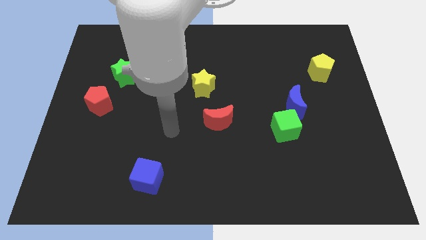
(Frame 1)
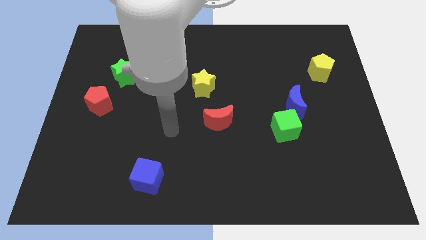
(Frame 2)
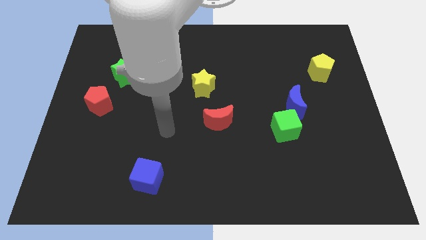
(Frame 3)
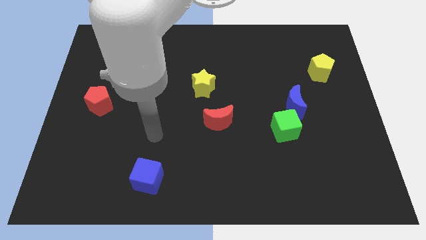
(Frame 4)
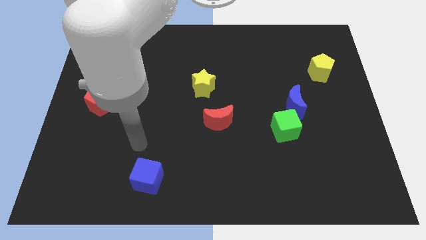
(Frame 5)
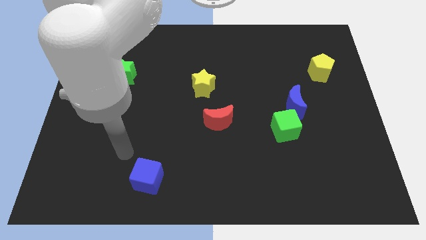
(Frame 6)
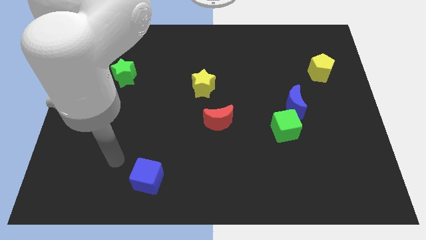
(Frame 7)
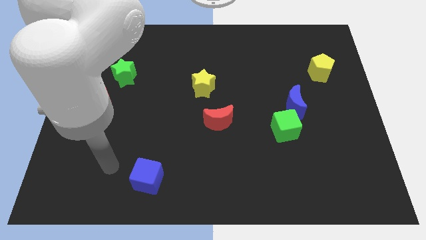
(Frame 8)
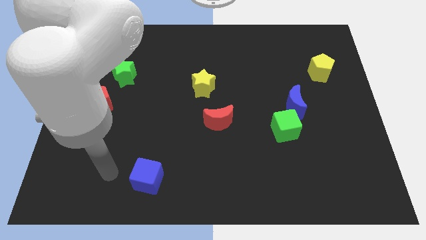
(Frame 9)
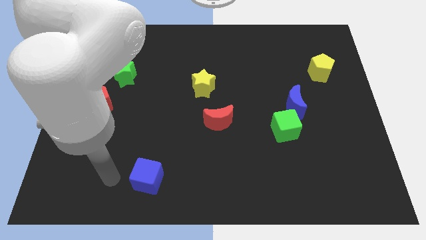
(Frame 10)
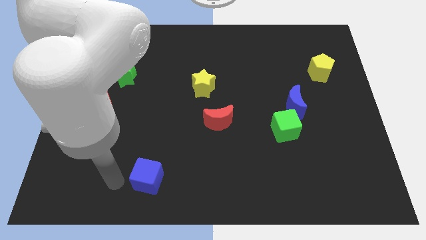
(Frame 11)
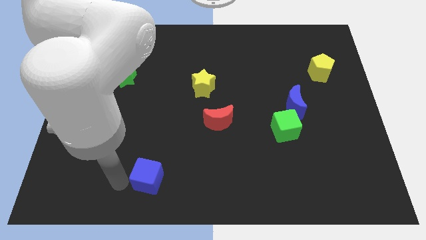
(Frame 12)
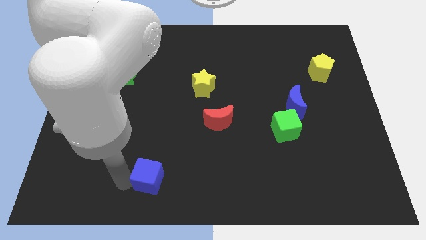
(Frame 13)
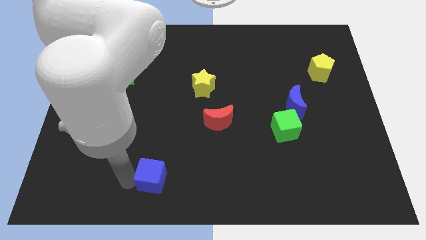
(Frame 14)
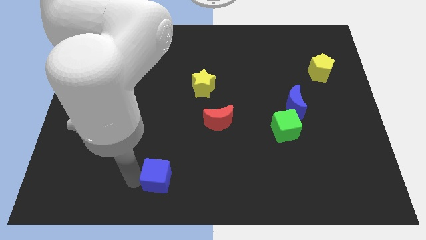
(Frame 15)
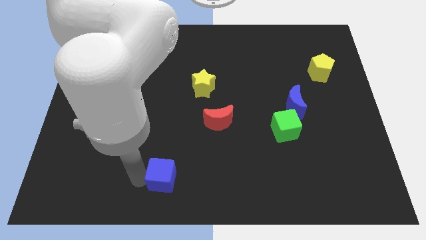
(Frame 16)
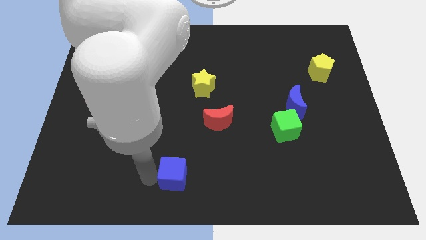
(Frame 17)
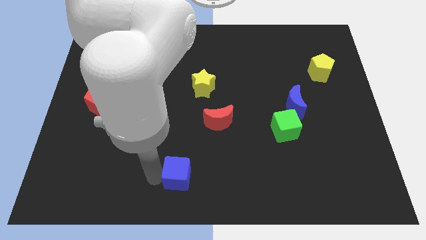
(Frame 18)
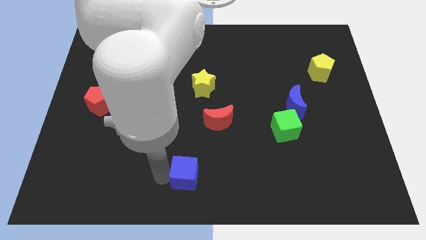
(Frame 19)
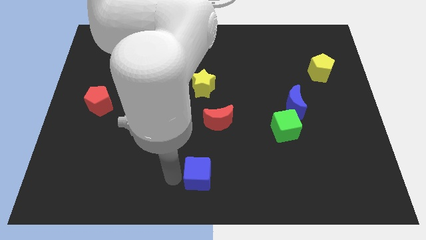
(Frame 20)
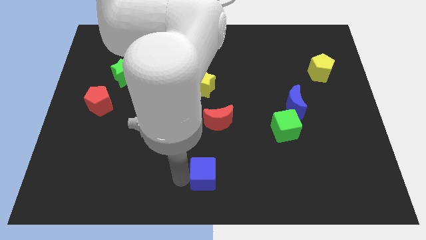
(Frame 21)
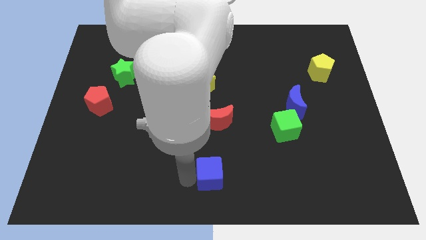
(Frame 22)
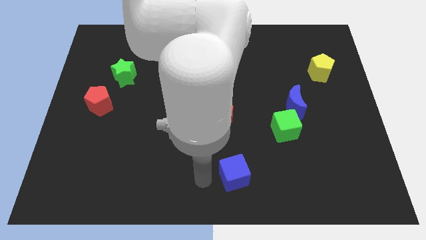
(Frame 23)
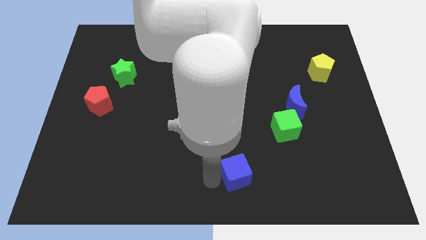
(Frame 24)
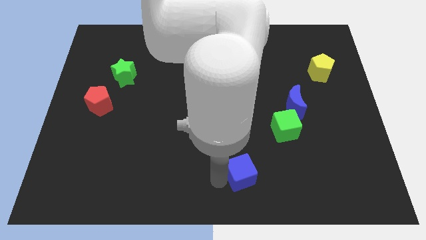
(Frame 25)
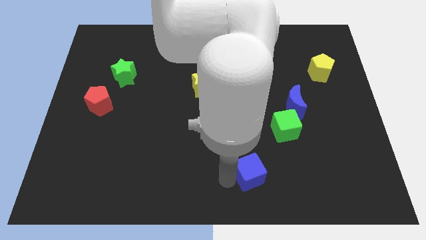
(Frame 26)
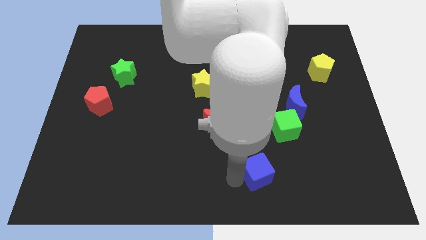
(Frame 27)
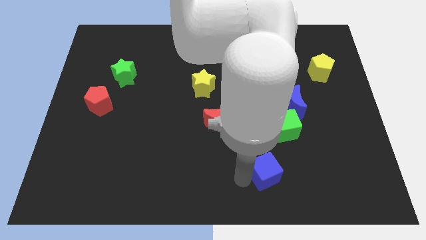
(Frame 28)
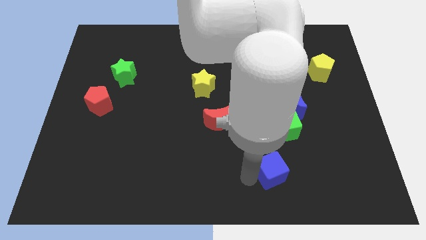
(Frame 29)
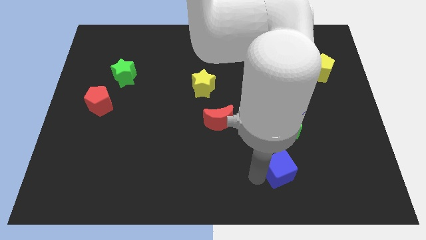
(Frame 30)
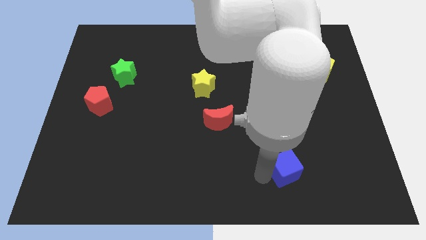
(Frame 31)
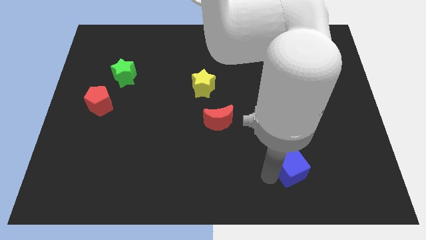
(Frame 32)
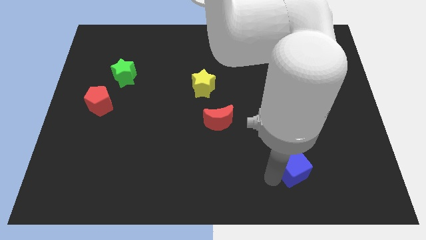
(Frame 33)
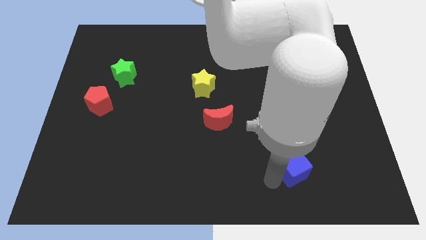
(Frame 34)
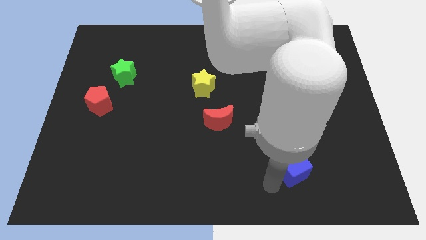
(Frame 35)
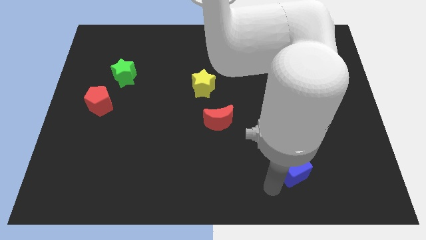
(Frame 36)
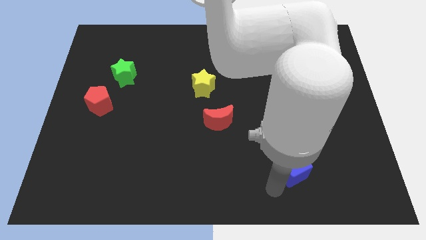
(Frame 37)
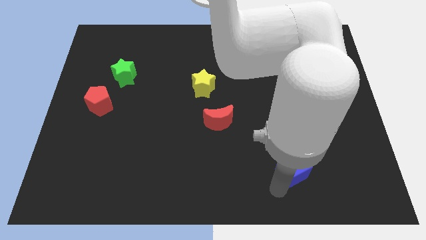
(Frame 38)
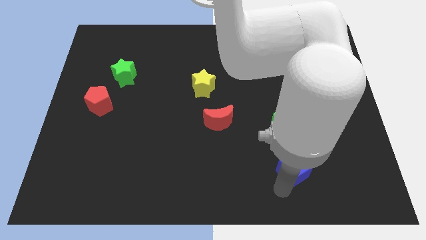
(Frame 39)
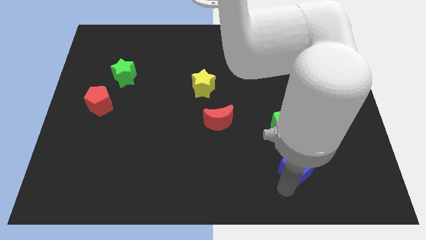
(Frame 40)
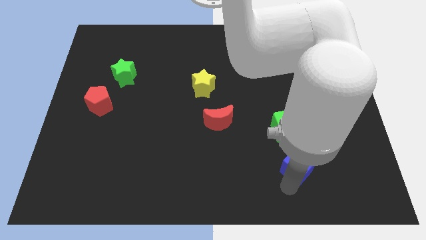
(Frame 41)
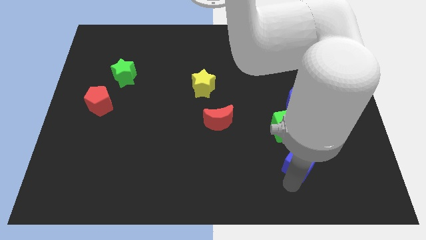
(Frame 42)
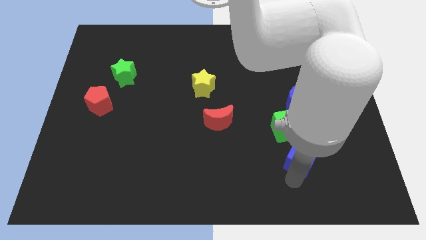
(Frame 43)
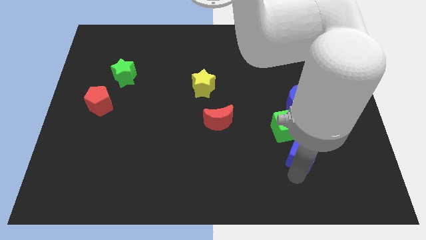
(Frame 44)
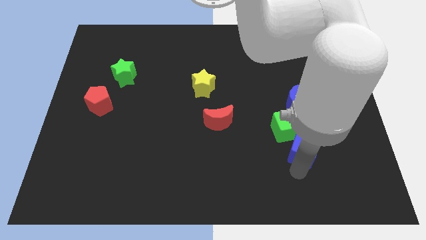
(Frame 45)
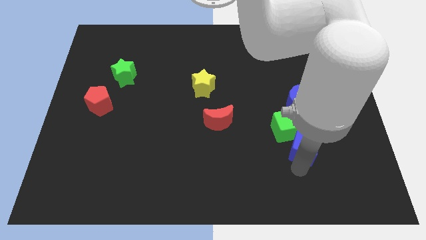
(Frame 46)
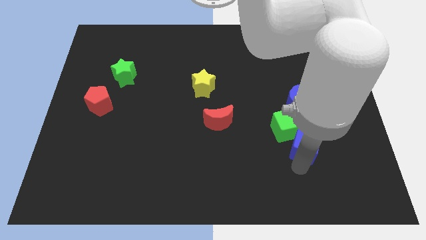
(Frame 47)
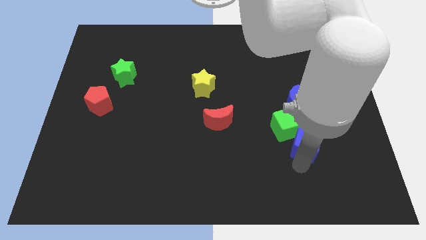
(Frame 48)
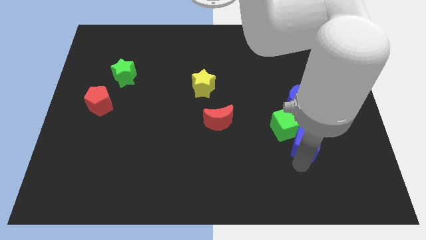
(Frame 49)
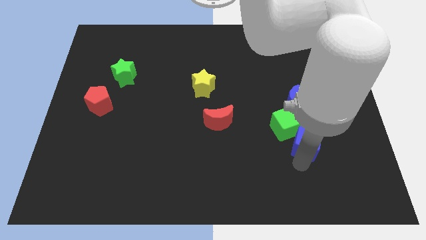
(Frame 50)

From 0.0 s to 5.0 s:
push the blue cube close to the green cube

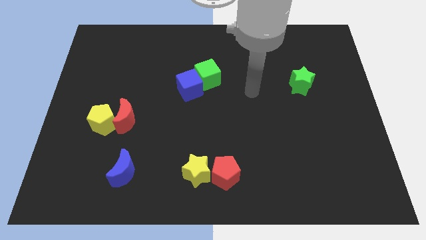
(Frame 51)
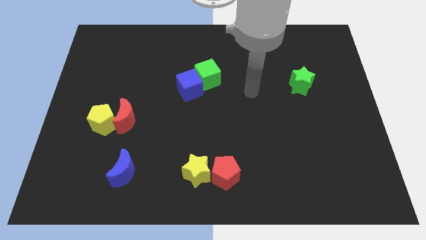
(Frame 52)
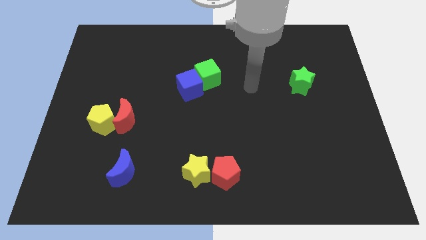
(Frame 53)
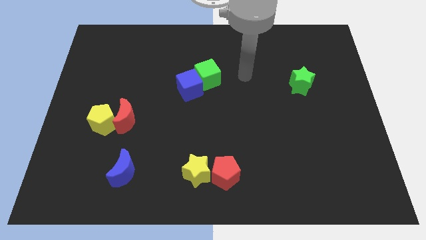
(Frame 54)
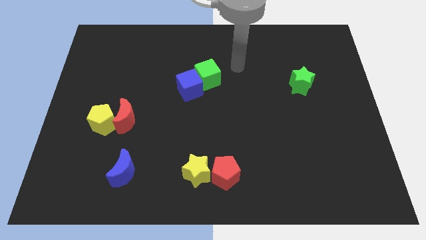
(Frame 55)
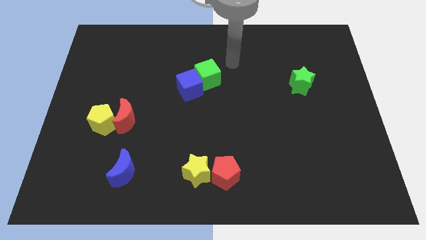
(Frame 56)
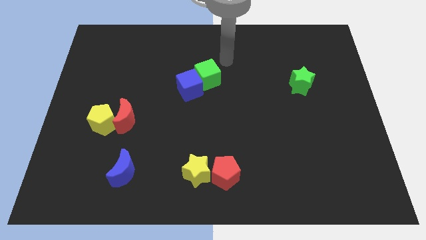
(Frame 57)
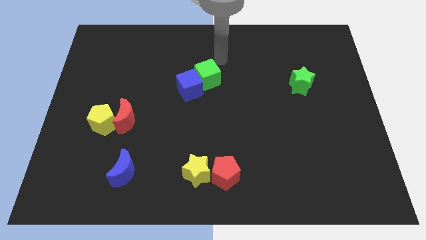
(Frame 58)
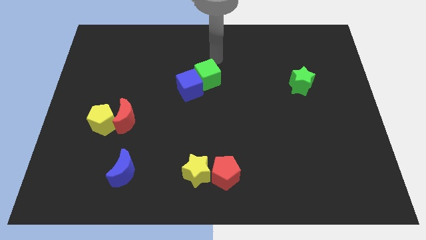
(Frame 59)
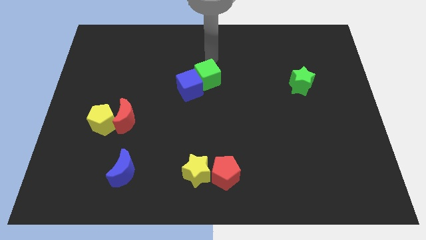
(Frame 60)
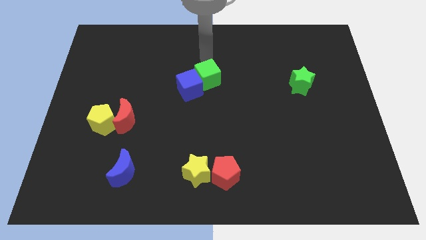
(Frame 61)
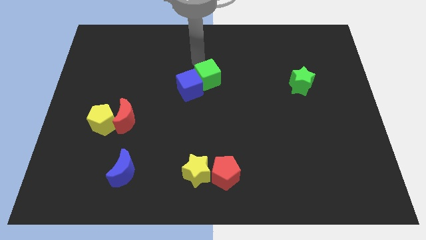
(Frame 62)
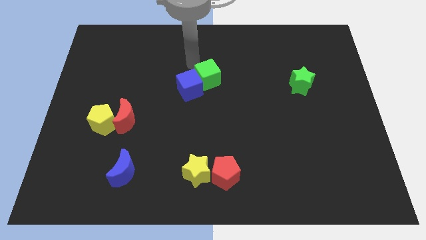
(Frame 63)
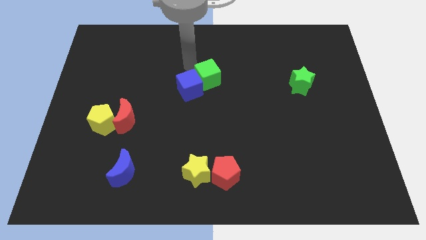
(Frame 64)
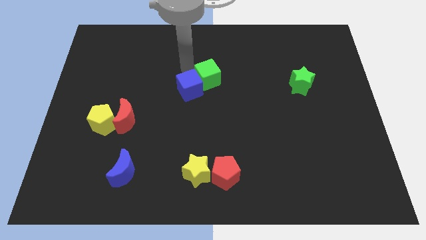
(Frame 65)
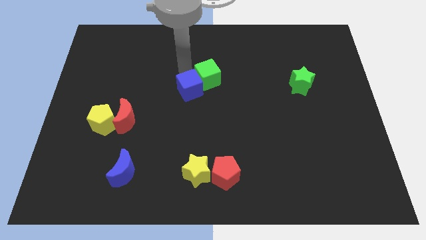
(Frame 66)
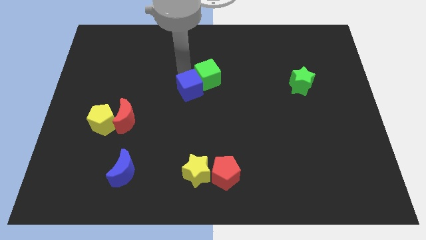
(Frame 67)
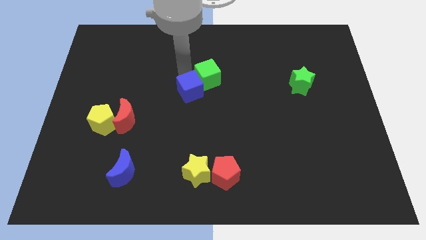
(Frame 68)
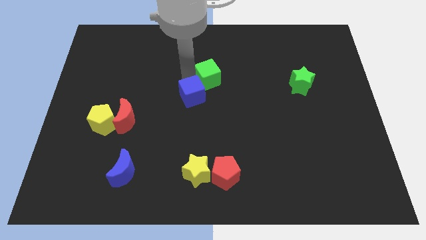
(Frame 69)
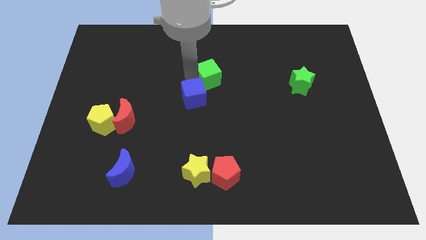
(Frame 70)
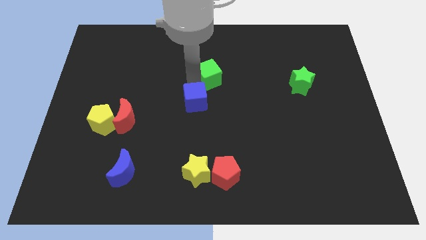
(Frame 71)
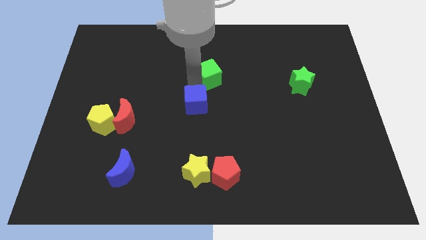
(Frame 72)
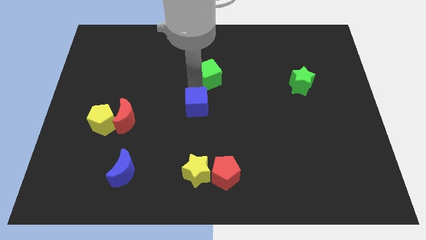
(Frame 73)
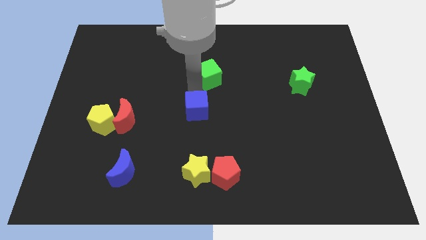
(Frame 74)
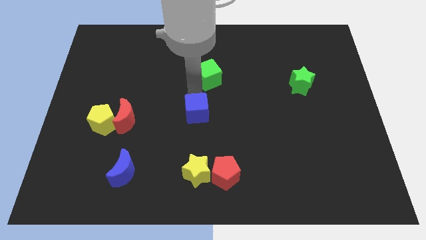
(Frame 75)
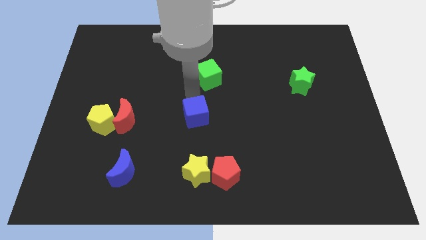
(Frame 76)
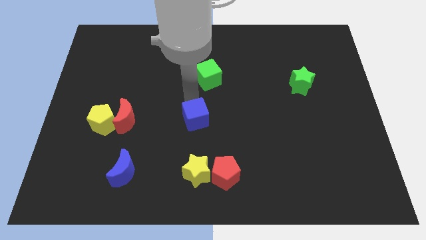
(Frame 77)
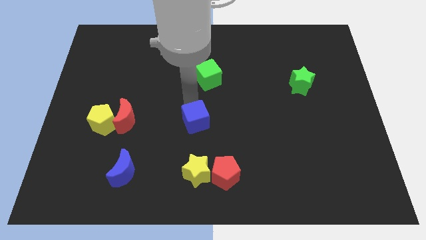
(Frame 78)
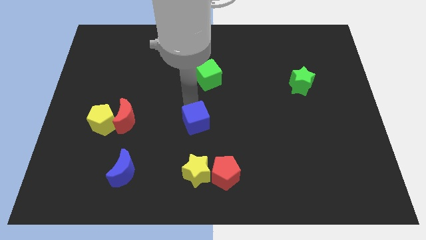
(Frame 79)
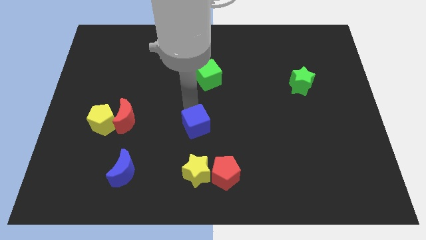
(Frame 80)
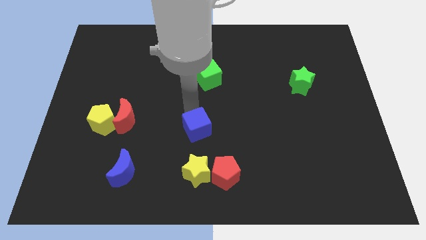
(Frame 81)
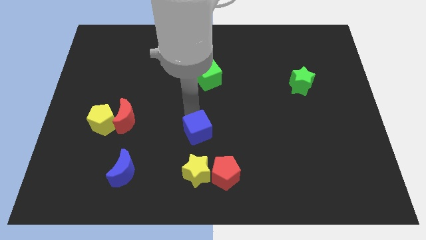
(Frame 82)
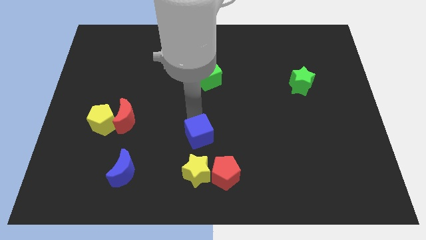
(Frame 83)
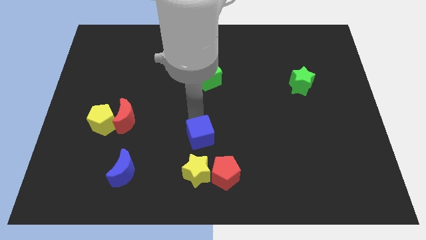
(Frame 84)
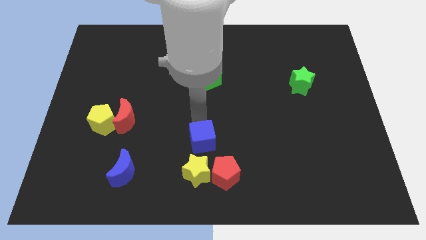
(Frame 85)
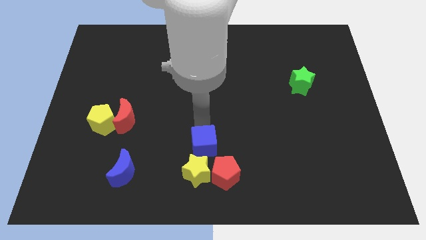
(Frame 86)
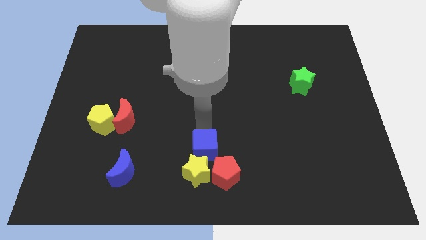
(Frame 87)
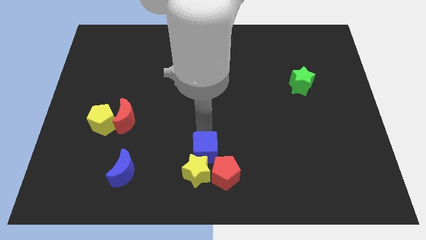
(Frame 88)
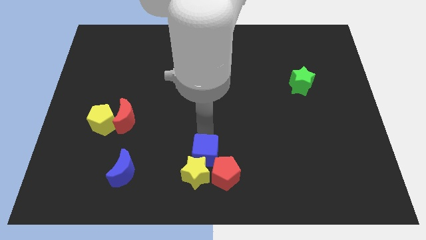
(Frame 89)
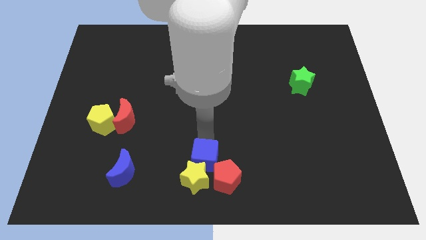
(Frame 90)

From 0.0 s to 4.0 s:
move the blue cube towards the yellow star
